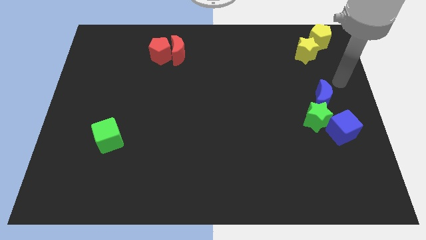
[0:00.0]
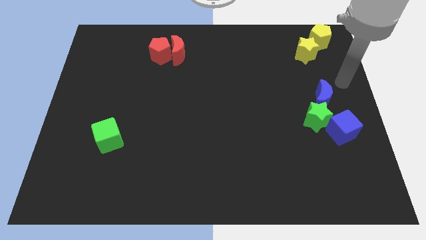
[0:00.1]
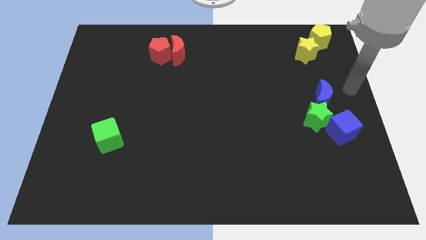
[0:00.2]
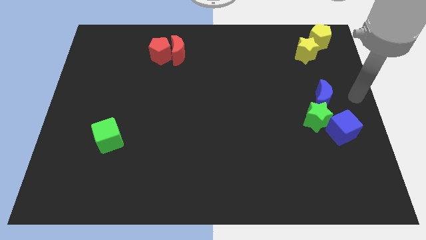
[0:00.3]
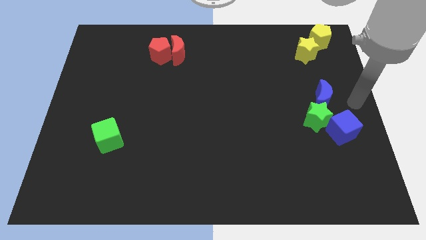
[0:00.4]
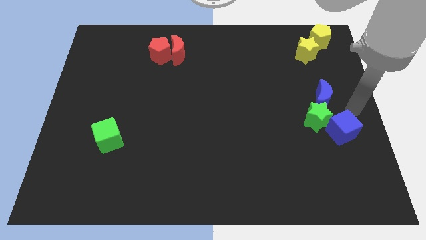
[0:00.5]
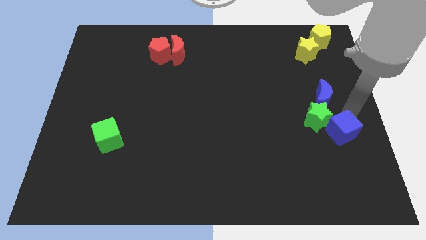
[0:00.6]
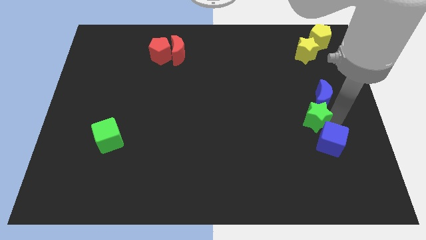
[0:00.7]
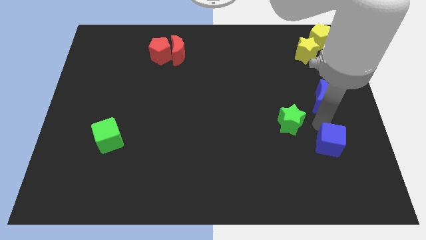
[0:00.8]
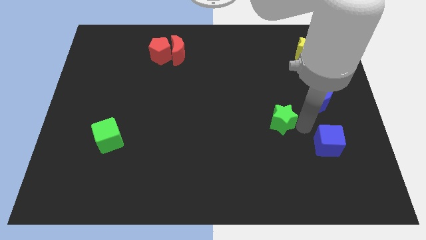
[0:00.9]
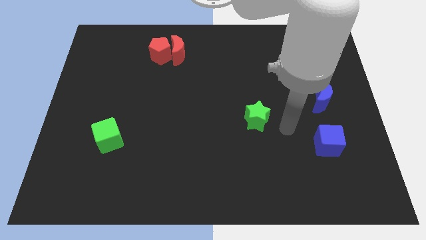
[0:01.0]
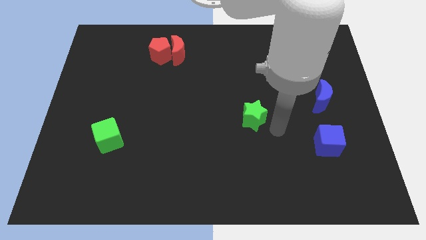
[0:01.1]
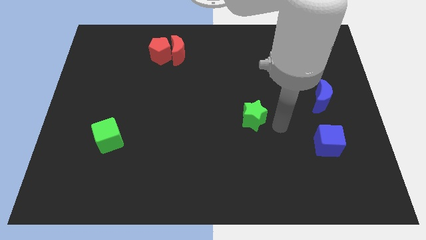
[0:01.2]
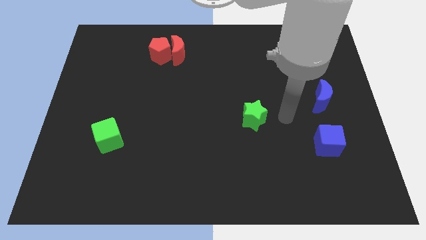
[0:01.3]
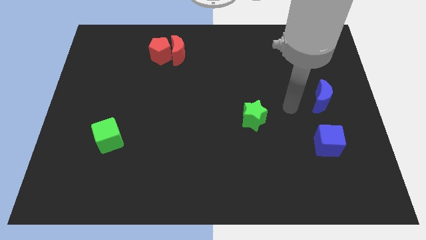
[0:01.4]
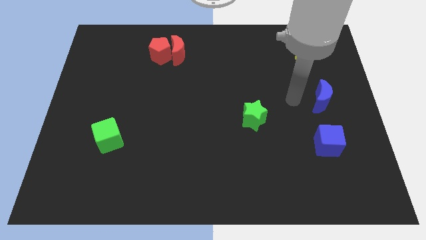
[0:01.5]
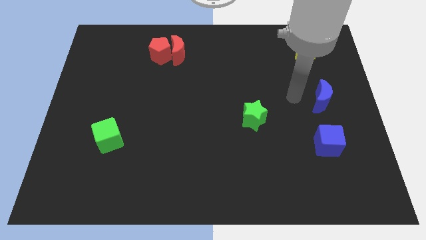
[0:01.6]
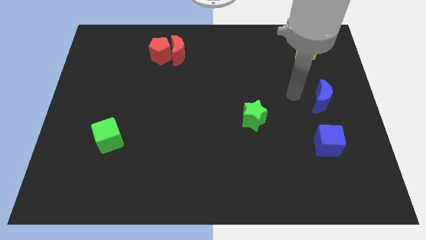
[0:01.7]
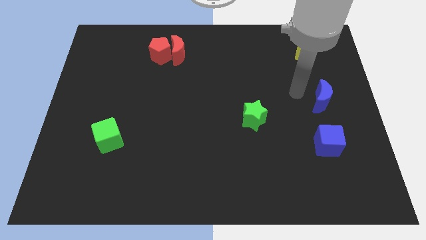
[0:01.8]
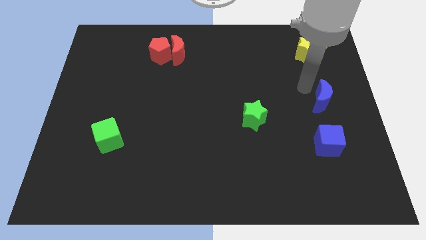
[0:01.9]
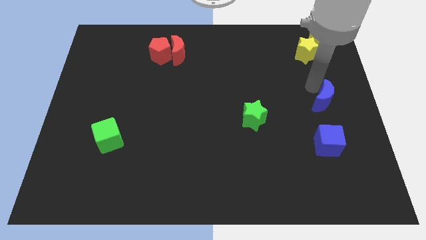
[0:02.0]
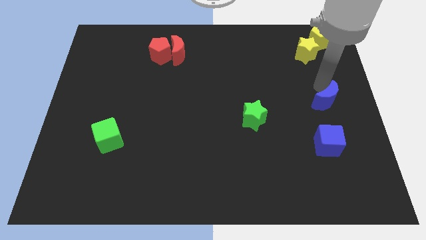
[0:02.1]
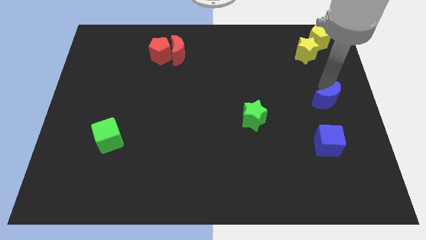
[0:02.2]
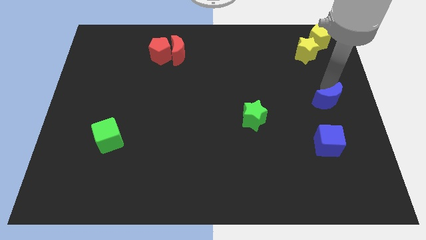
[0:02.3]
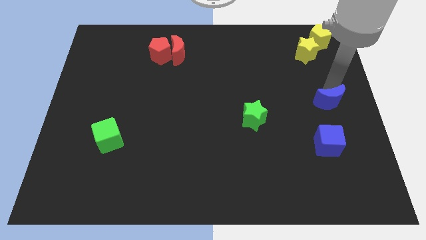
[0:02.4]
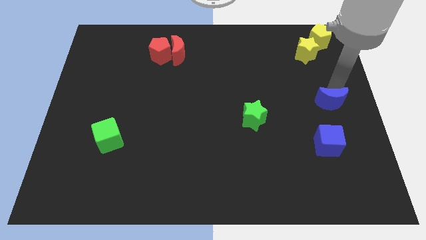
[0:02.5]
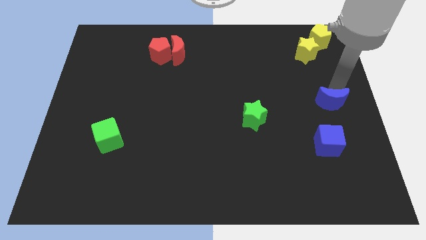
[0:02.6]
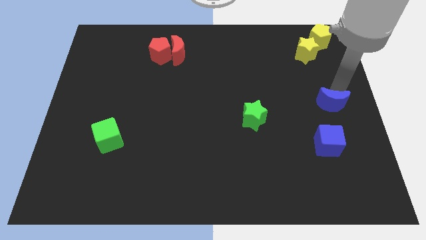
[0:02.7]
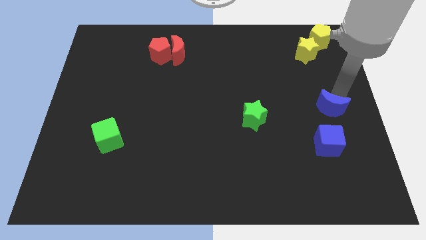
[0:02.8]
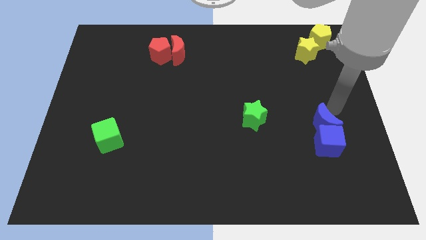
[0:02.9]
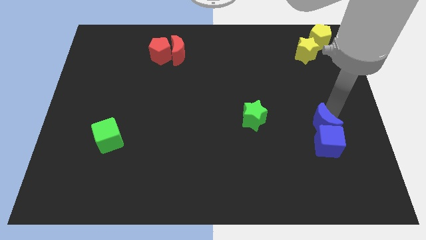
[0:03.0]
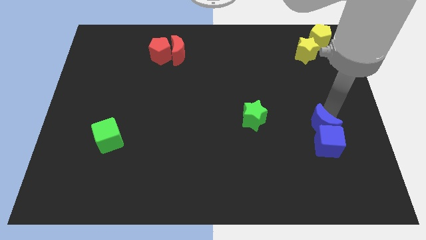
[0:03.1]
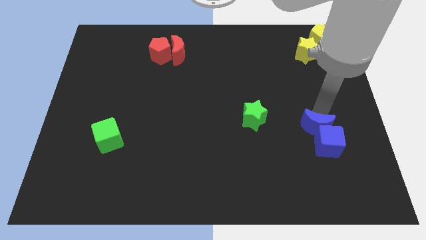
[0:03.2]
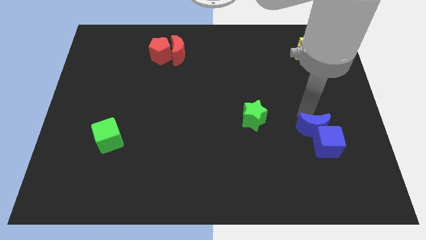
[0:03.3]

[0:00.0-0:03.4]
separate the green star from the blue blocks

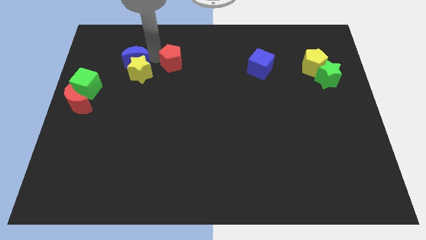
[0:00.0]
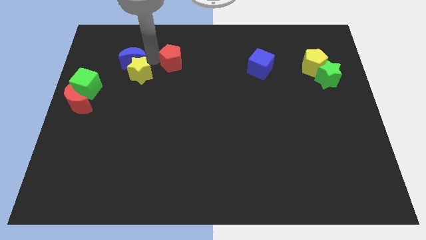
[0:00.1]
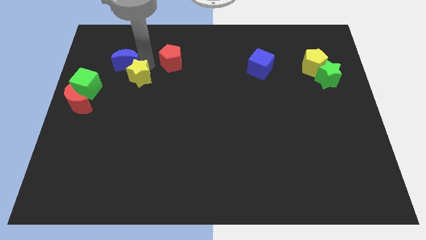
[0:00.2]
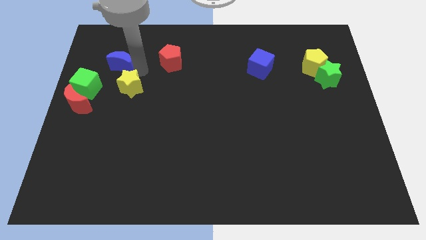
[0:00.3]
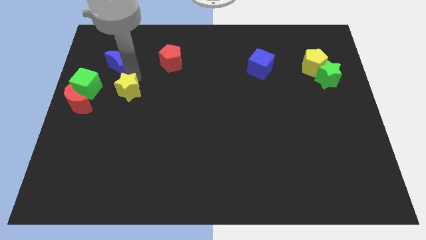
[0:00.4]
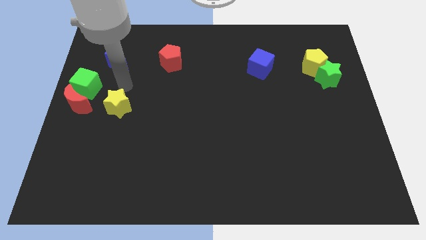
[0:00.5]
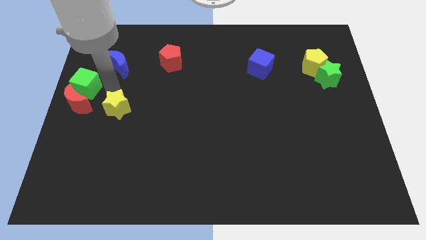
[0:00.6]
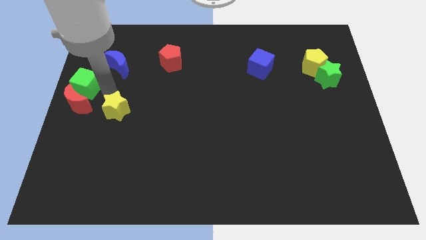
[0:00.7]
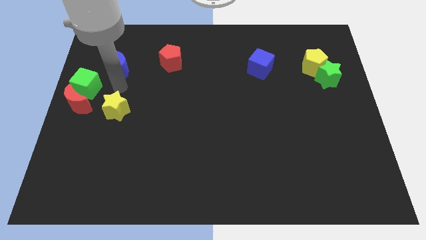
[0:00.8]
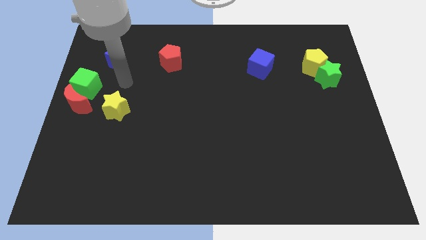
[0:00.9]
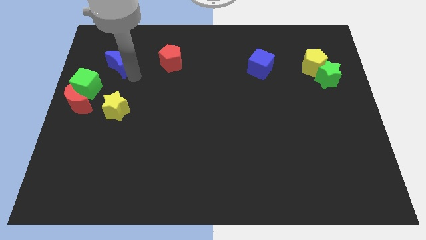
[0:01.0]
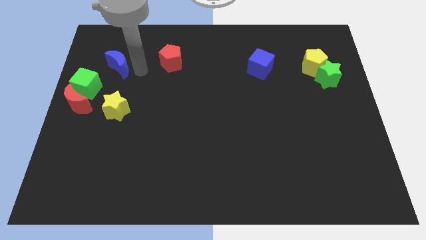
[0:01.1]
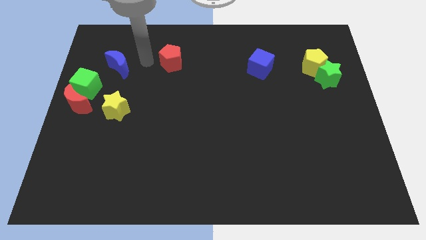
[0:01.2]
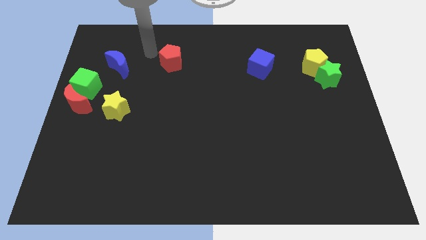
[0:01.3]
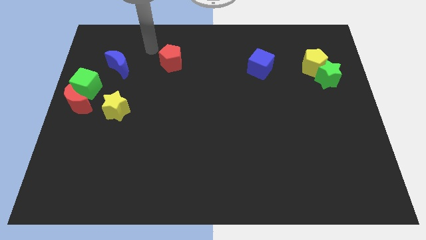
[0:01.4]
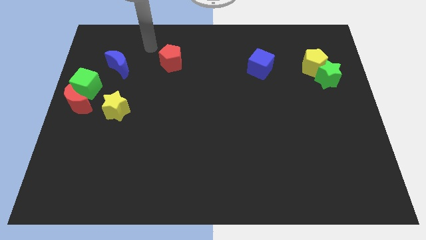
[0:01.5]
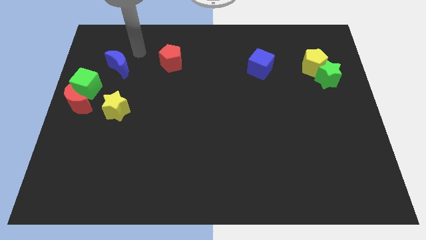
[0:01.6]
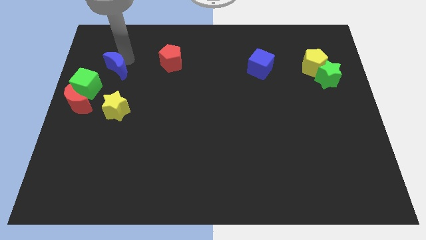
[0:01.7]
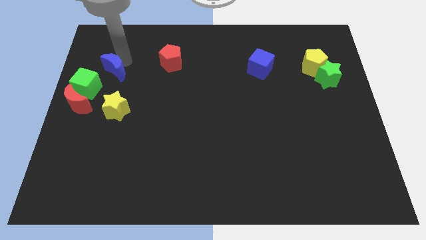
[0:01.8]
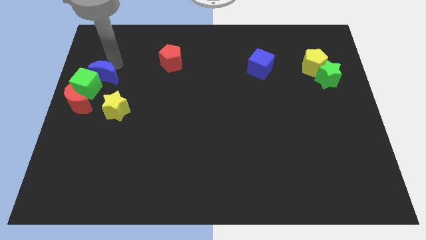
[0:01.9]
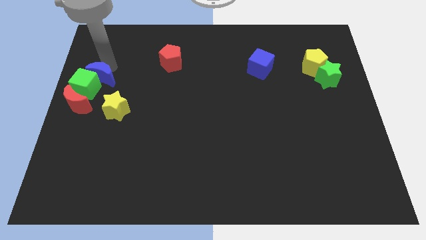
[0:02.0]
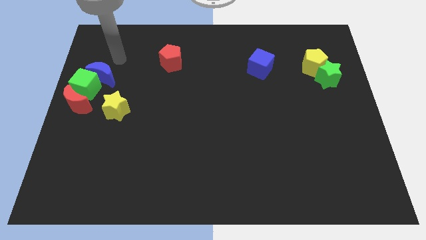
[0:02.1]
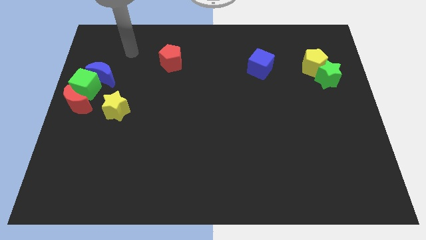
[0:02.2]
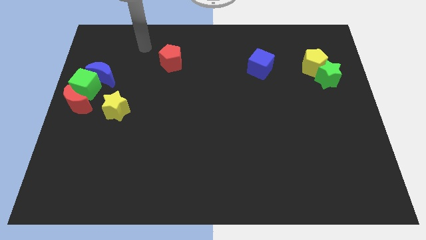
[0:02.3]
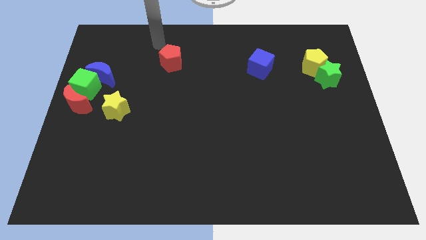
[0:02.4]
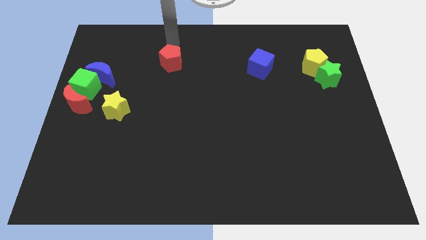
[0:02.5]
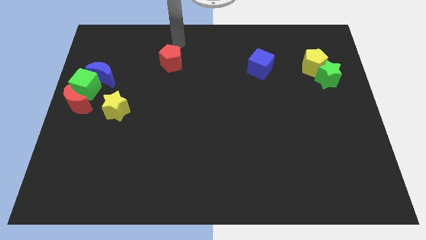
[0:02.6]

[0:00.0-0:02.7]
push the blue crescent and yellow star towards the left side of the board to form a group

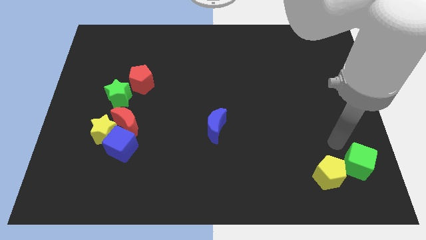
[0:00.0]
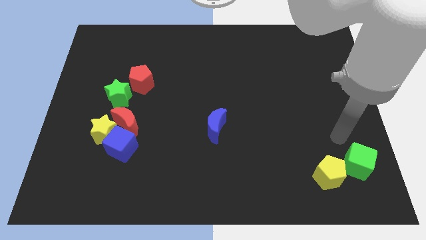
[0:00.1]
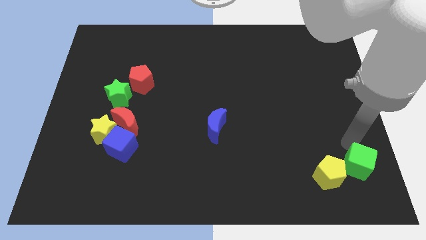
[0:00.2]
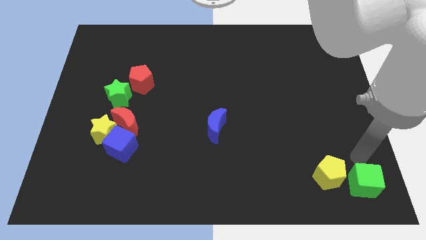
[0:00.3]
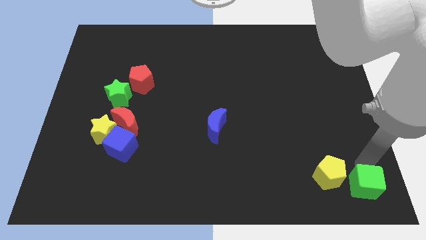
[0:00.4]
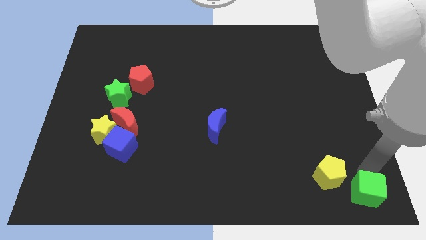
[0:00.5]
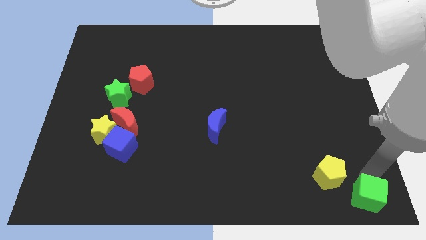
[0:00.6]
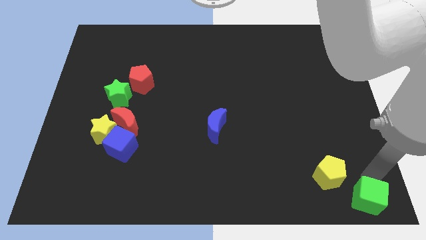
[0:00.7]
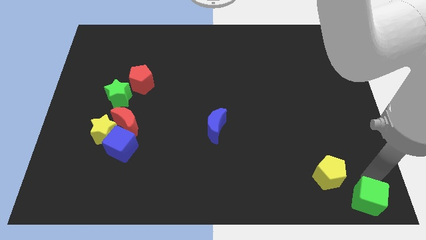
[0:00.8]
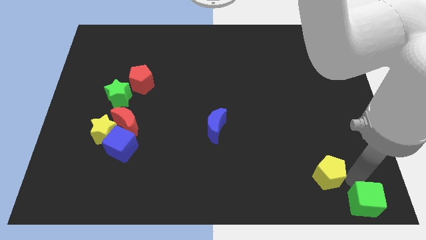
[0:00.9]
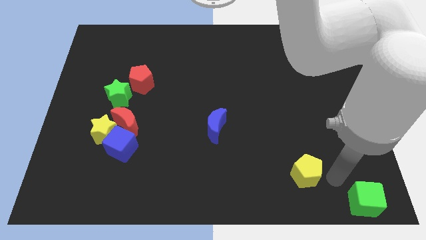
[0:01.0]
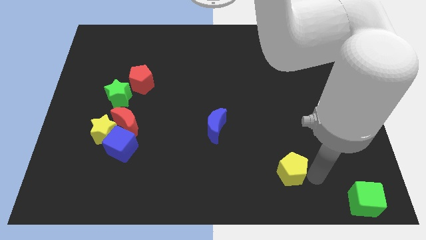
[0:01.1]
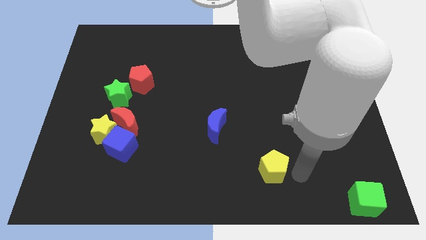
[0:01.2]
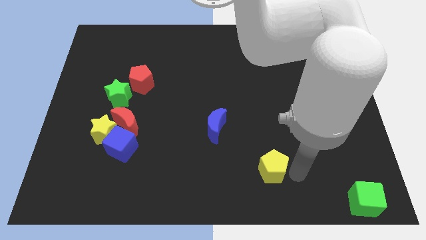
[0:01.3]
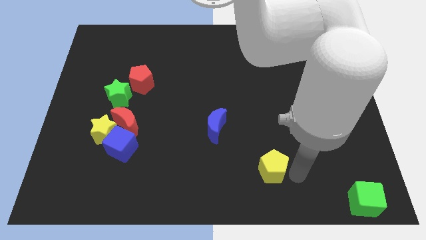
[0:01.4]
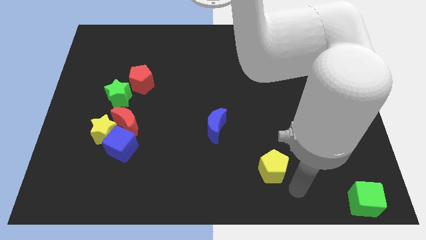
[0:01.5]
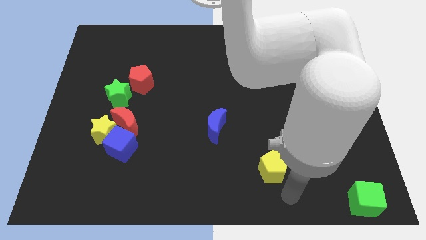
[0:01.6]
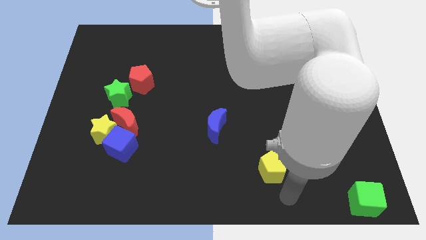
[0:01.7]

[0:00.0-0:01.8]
push the green cube to the bottom right of the board

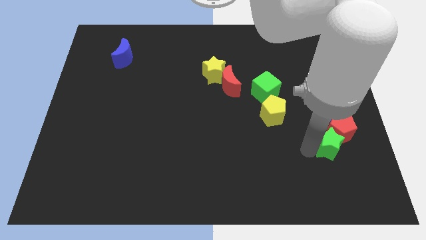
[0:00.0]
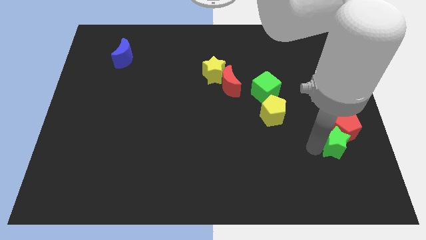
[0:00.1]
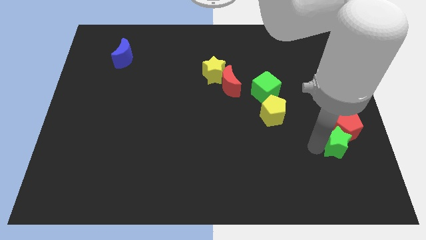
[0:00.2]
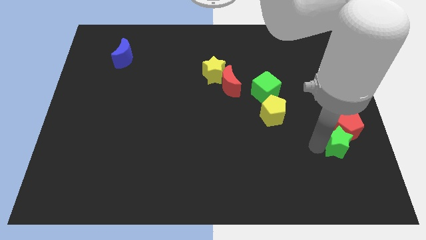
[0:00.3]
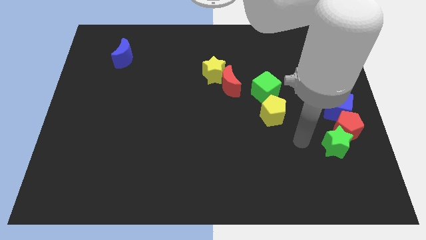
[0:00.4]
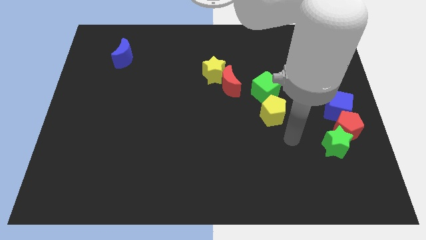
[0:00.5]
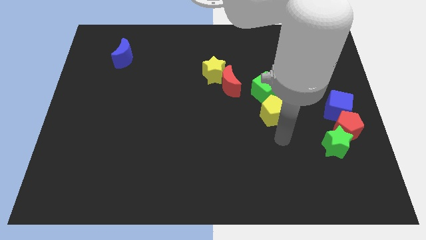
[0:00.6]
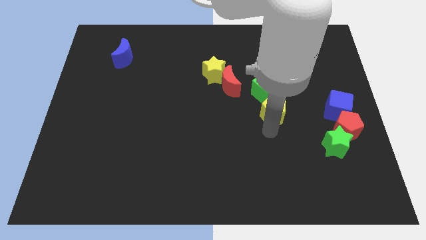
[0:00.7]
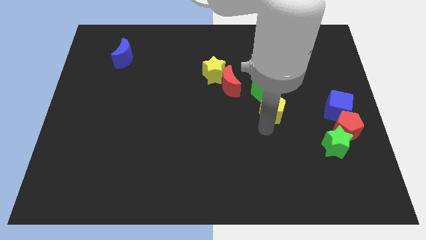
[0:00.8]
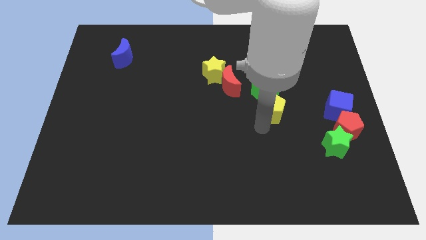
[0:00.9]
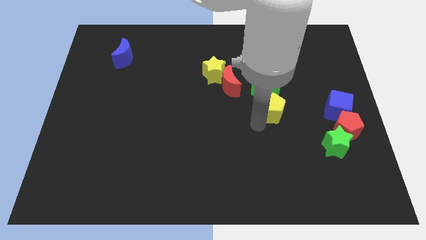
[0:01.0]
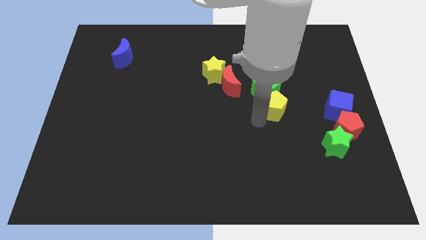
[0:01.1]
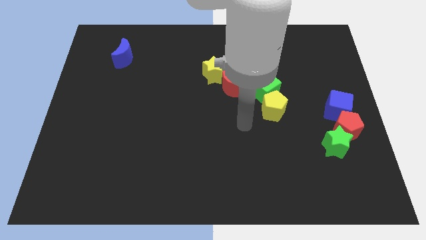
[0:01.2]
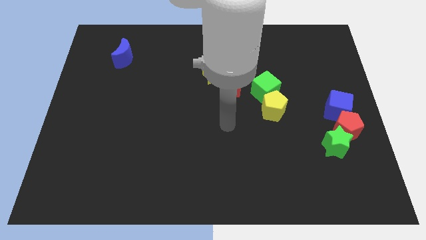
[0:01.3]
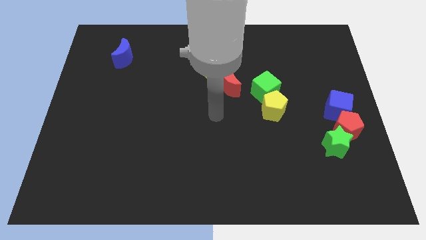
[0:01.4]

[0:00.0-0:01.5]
push the yellow pentagon into the green cube
